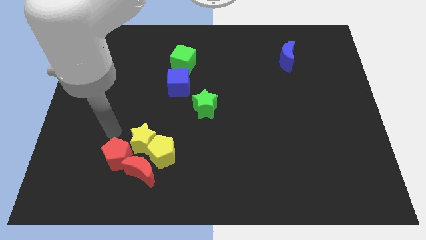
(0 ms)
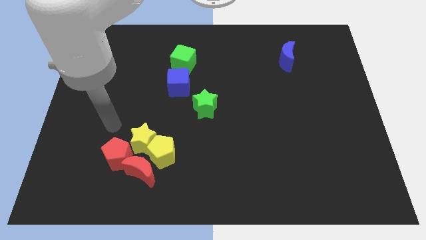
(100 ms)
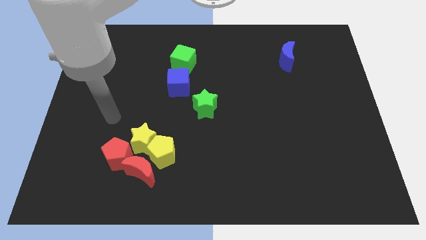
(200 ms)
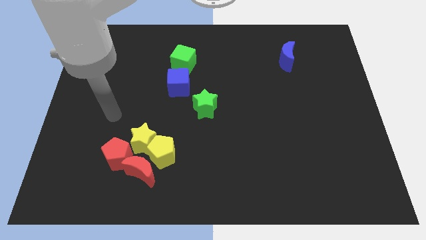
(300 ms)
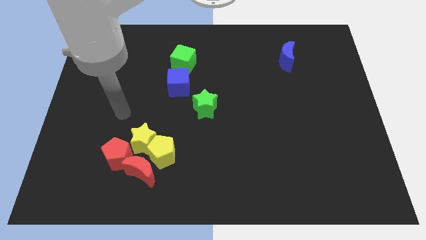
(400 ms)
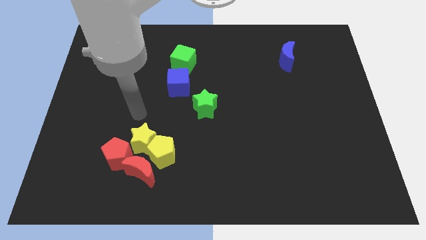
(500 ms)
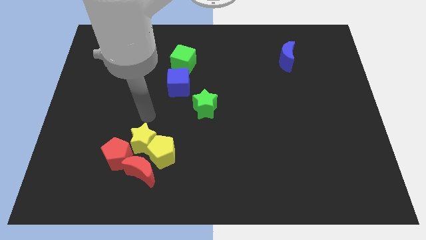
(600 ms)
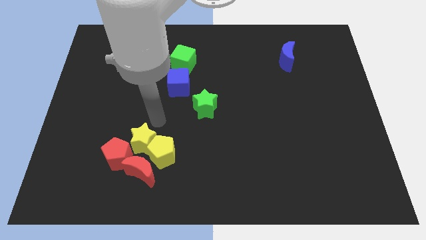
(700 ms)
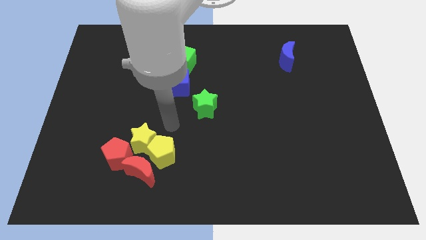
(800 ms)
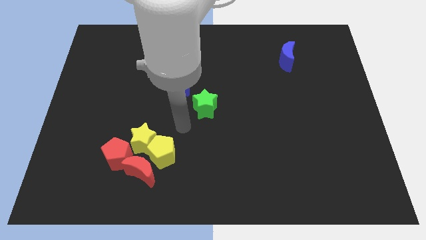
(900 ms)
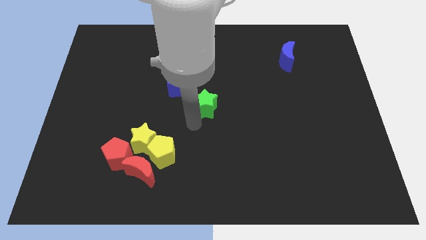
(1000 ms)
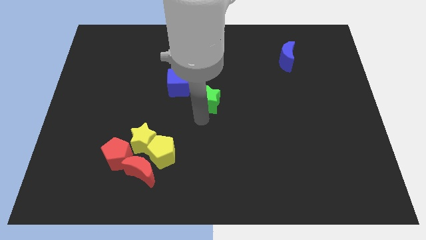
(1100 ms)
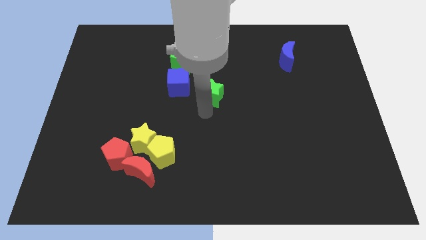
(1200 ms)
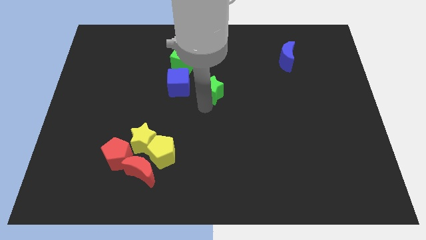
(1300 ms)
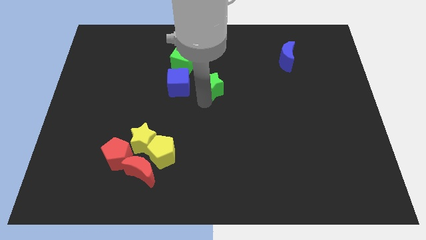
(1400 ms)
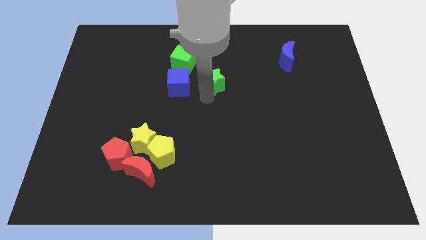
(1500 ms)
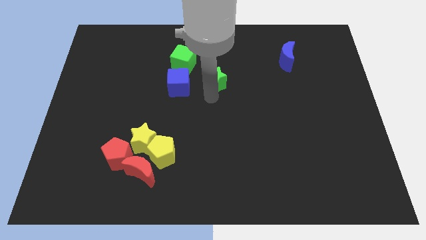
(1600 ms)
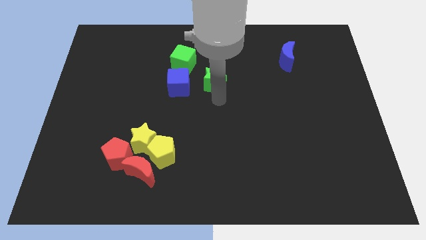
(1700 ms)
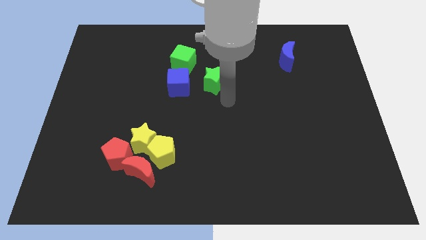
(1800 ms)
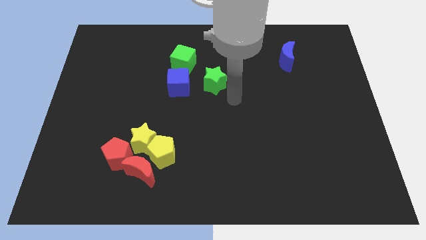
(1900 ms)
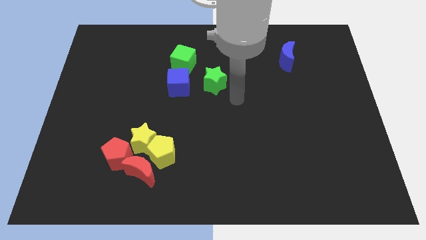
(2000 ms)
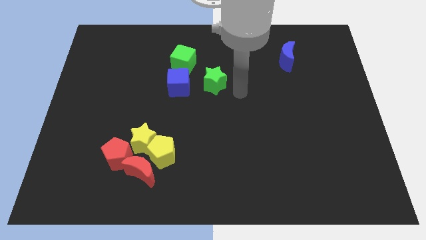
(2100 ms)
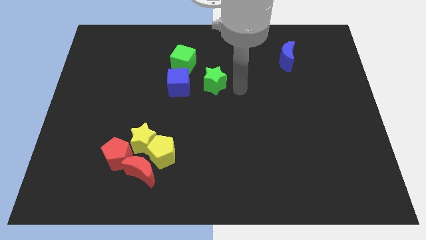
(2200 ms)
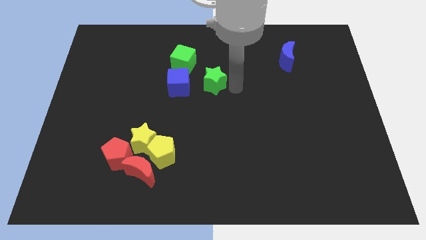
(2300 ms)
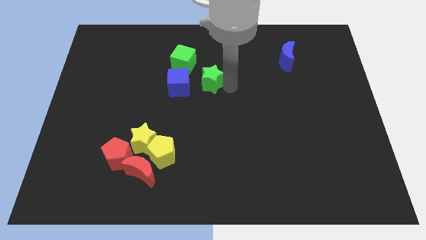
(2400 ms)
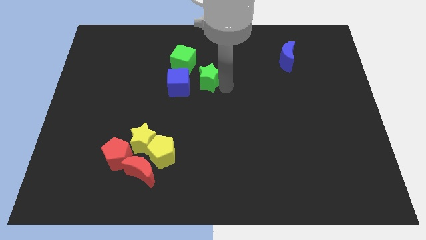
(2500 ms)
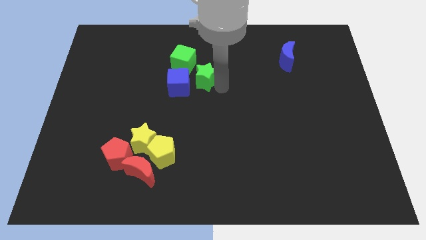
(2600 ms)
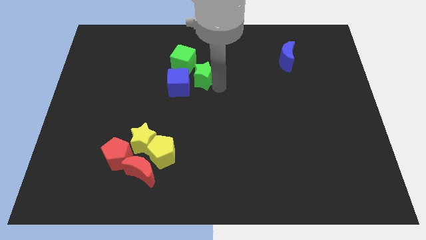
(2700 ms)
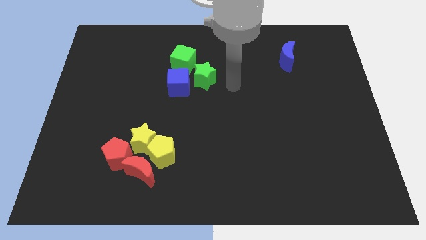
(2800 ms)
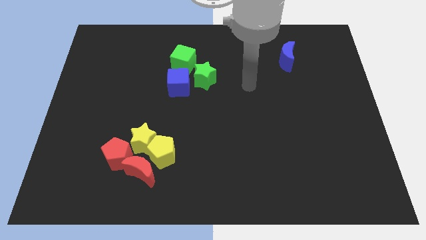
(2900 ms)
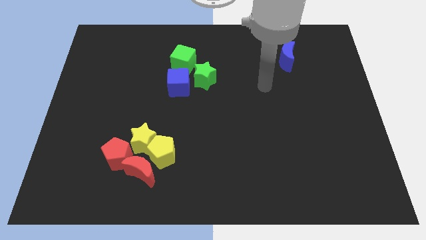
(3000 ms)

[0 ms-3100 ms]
move the green star close to the green cube

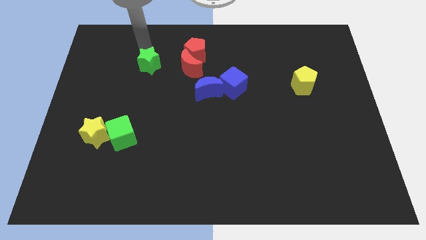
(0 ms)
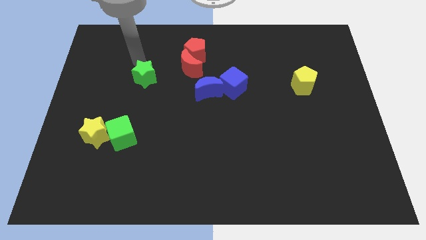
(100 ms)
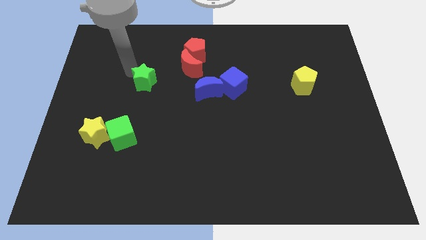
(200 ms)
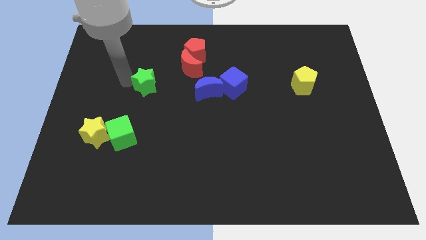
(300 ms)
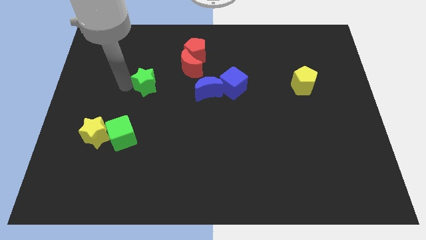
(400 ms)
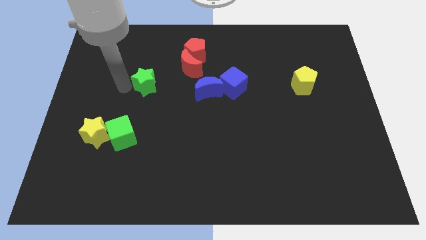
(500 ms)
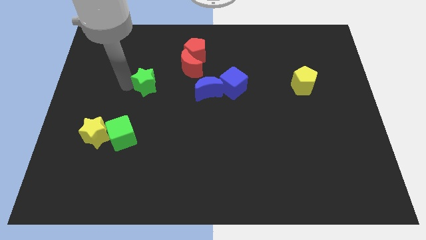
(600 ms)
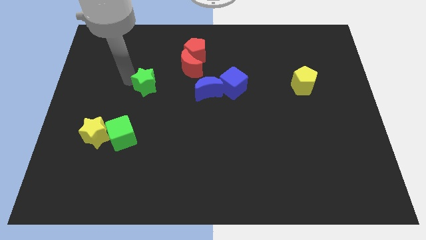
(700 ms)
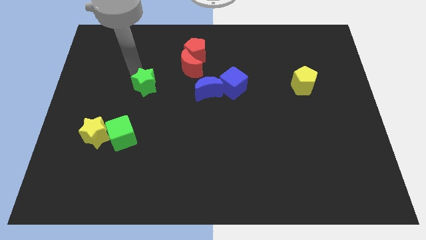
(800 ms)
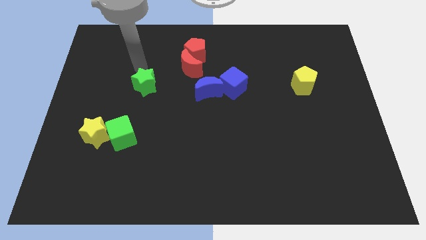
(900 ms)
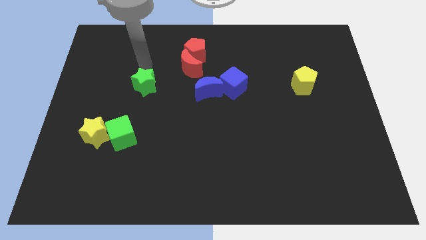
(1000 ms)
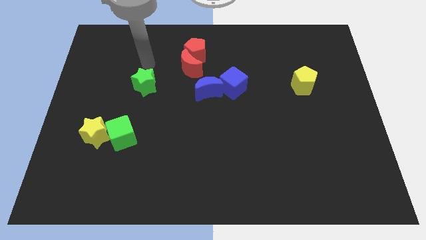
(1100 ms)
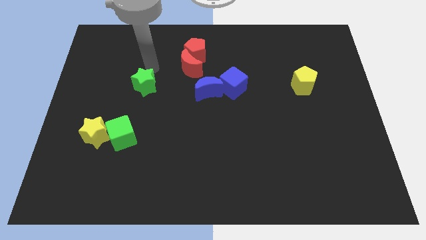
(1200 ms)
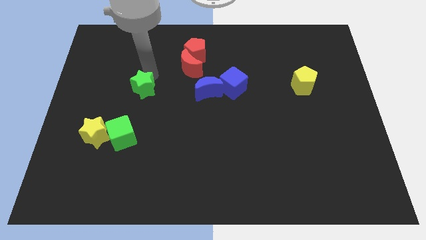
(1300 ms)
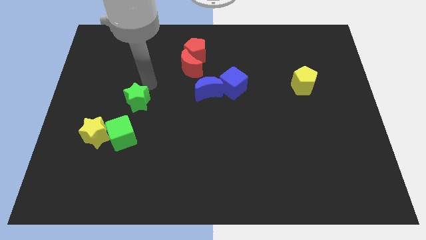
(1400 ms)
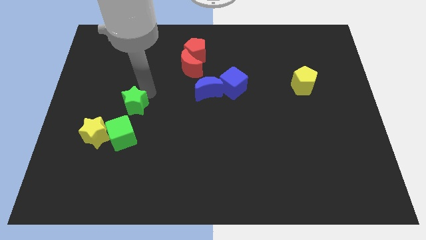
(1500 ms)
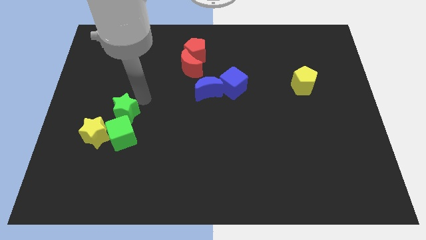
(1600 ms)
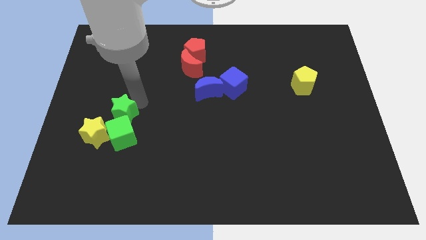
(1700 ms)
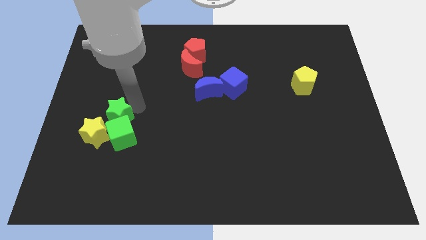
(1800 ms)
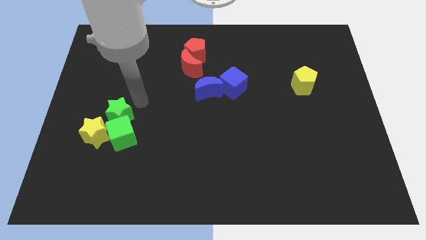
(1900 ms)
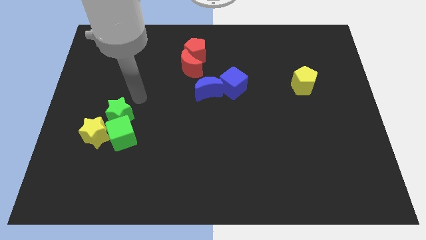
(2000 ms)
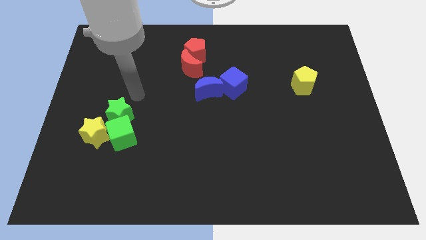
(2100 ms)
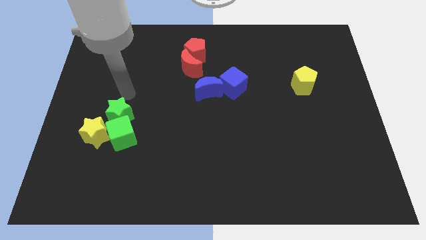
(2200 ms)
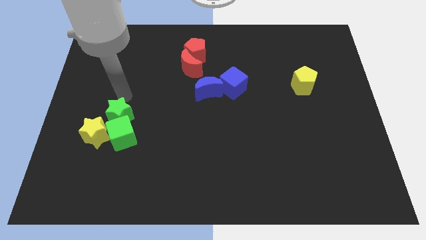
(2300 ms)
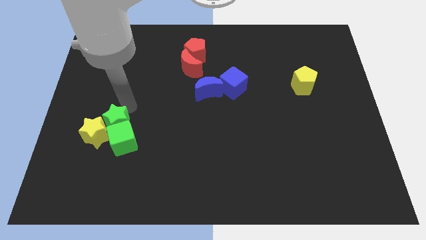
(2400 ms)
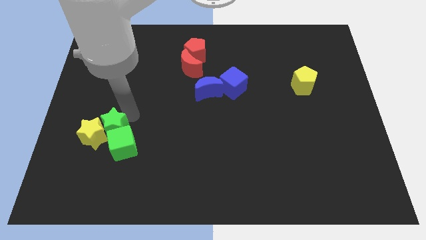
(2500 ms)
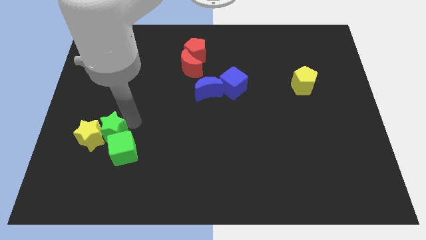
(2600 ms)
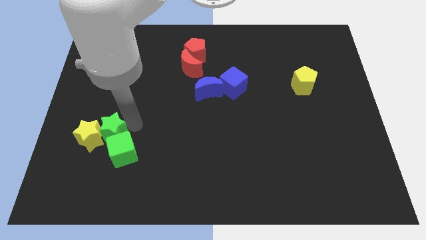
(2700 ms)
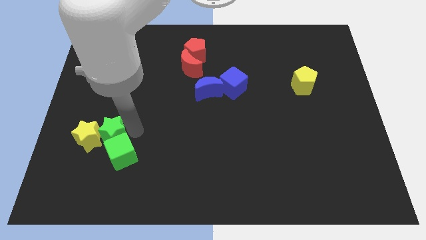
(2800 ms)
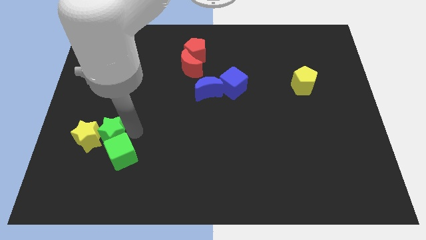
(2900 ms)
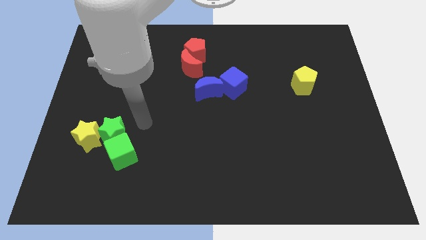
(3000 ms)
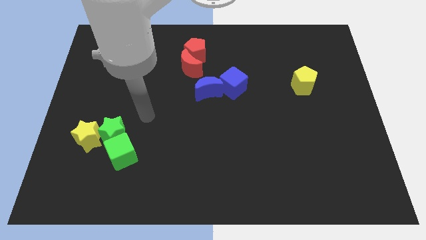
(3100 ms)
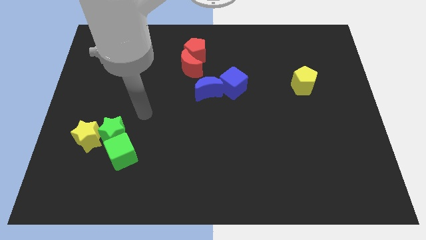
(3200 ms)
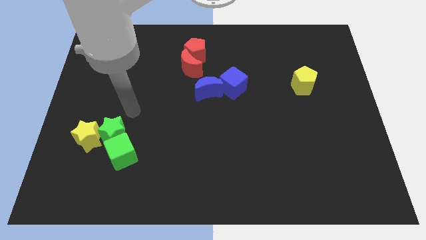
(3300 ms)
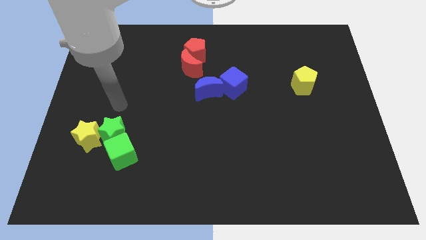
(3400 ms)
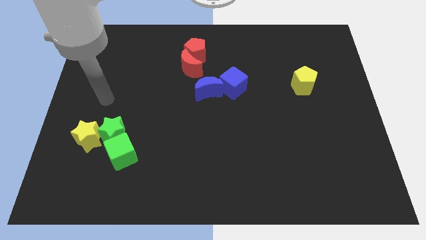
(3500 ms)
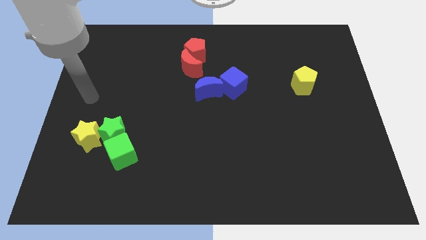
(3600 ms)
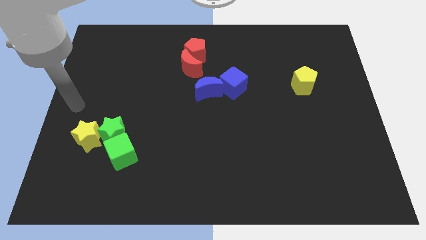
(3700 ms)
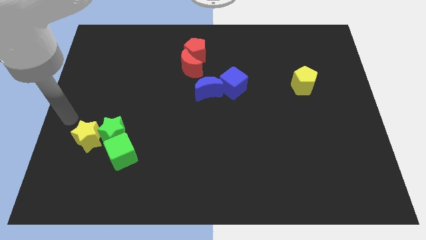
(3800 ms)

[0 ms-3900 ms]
place the green star into the yellow star and green cube

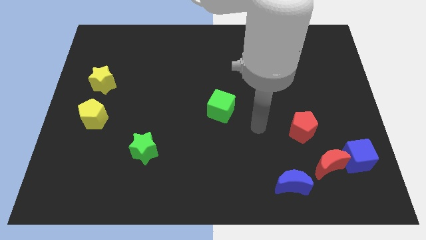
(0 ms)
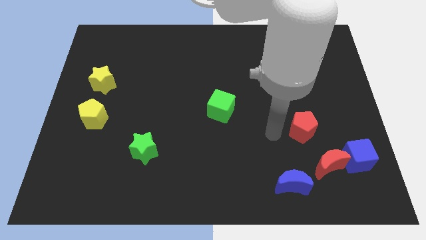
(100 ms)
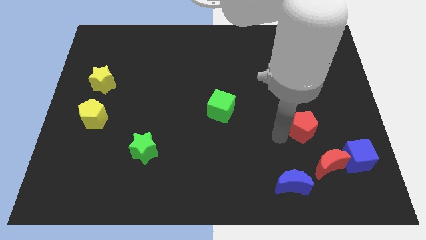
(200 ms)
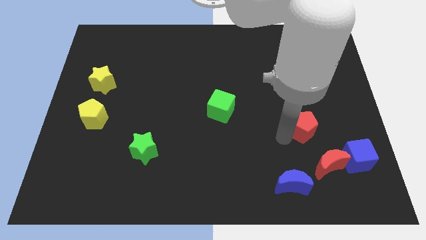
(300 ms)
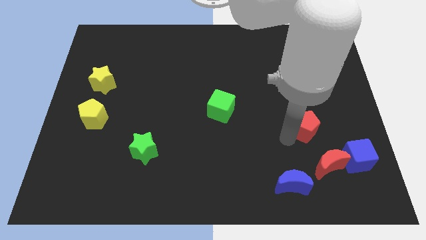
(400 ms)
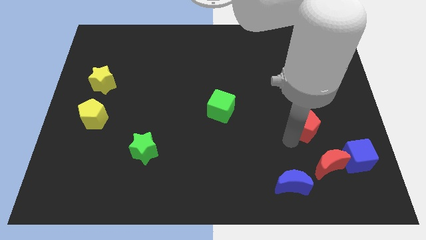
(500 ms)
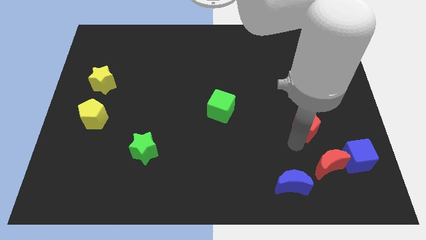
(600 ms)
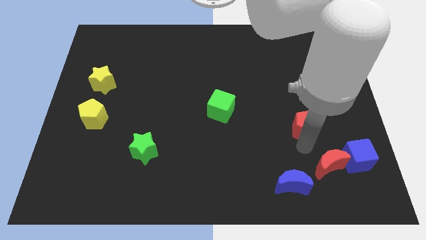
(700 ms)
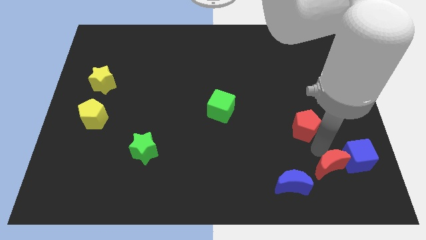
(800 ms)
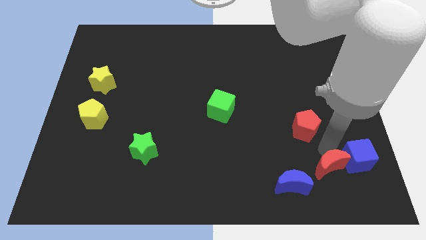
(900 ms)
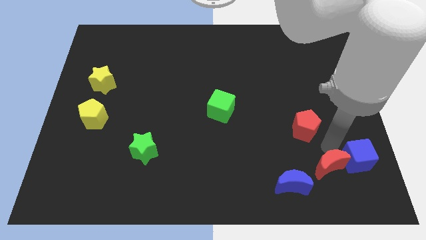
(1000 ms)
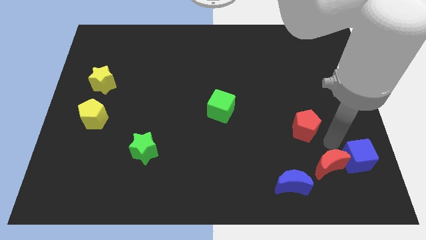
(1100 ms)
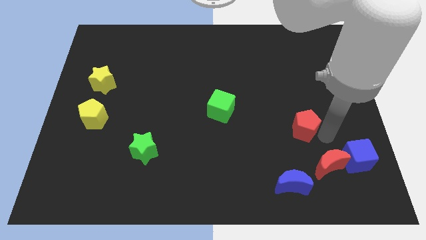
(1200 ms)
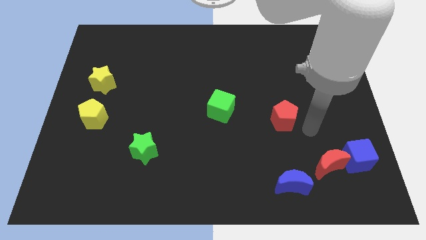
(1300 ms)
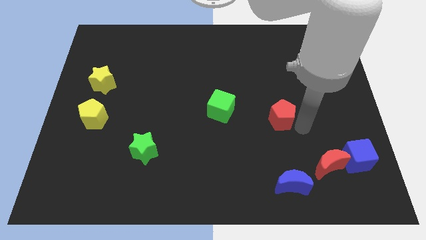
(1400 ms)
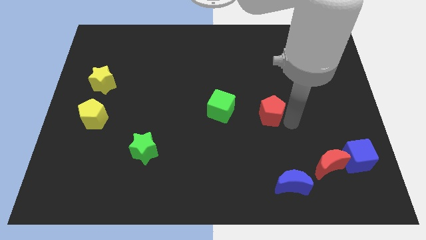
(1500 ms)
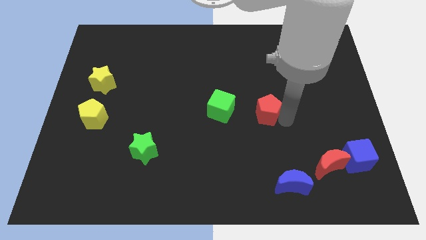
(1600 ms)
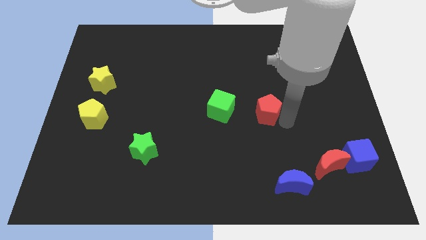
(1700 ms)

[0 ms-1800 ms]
slide the red pentagon towards the right side of the green cube
